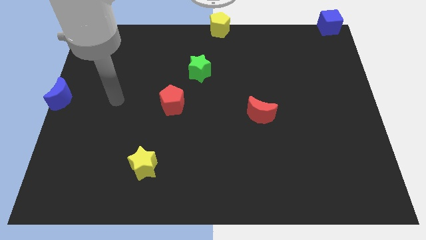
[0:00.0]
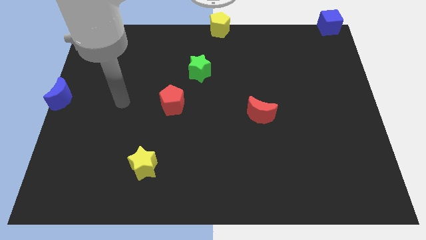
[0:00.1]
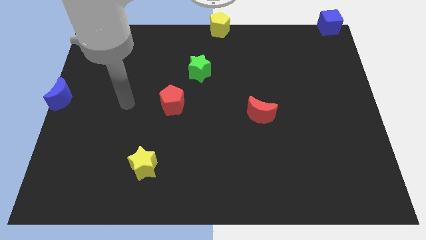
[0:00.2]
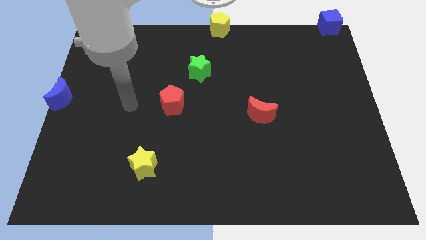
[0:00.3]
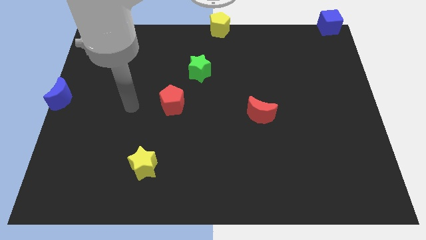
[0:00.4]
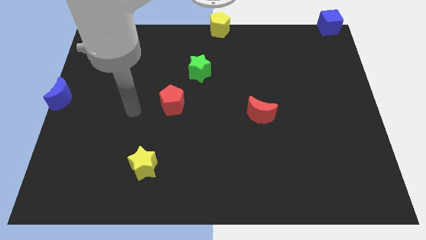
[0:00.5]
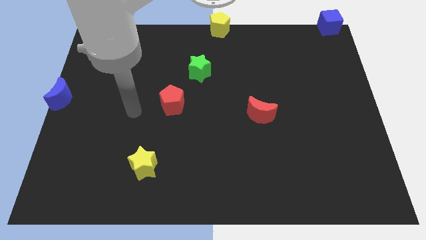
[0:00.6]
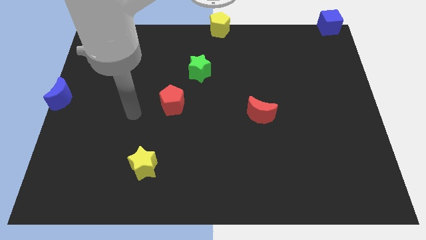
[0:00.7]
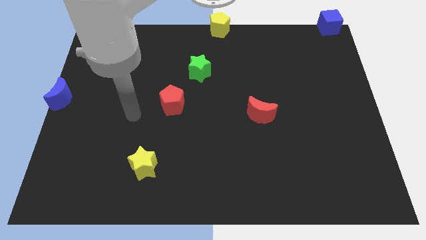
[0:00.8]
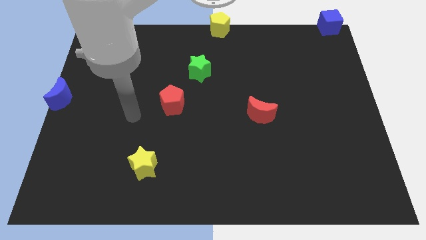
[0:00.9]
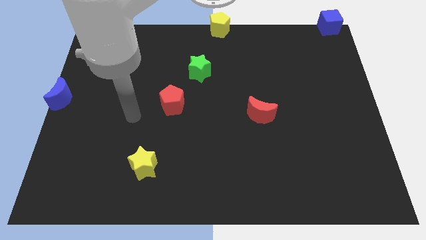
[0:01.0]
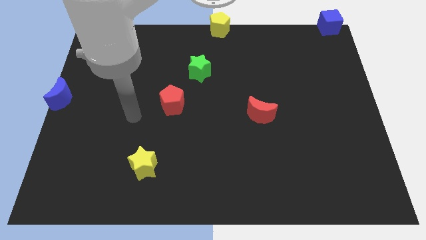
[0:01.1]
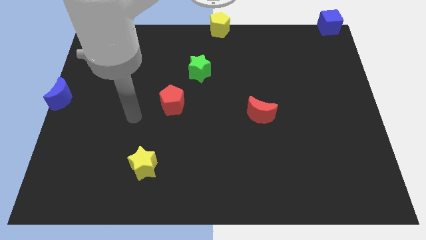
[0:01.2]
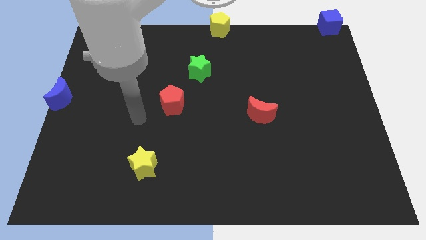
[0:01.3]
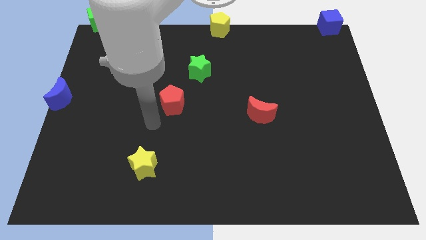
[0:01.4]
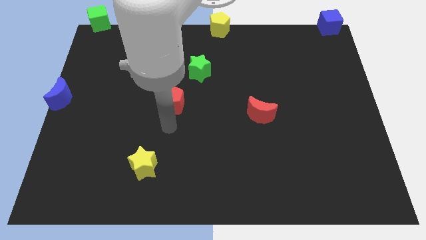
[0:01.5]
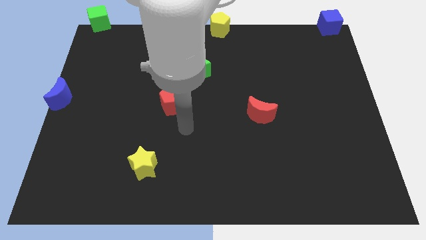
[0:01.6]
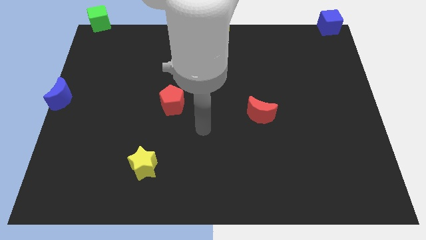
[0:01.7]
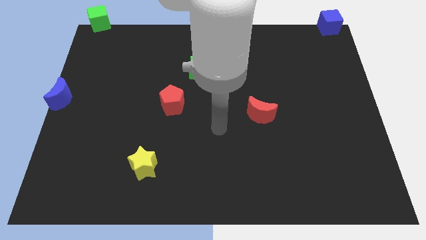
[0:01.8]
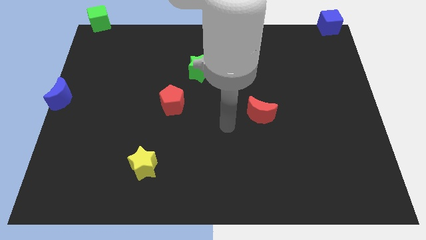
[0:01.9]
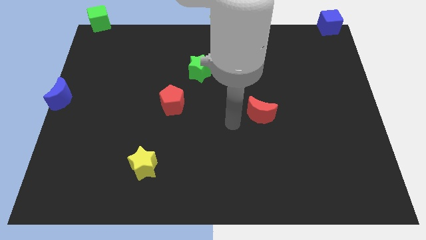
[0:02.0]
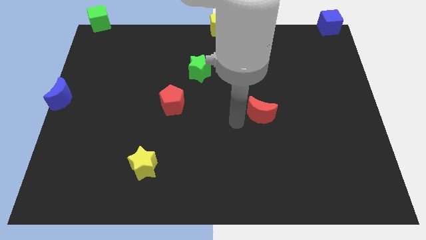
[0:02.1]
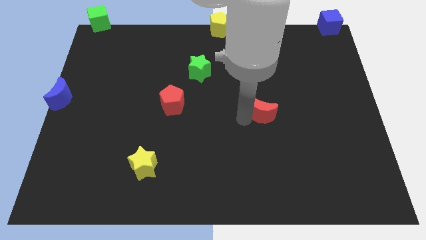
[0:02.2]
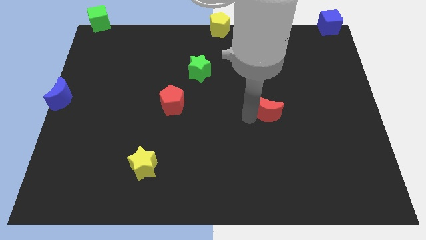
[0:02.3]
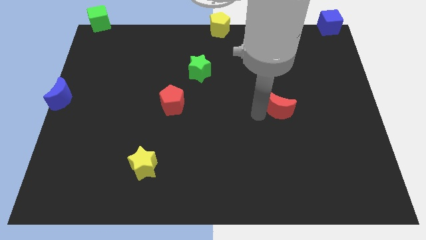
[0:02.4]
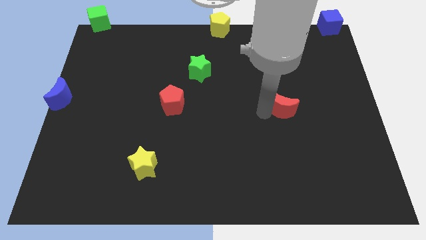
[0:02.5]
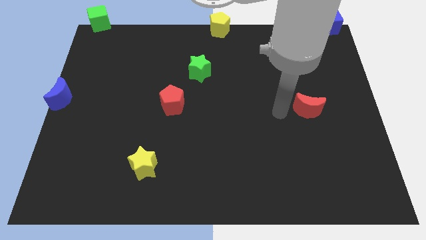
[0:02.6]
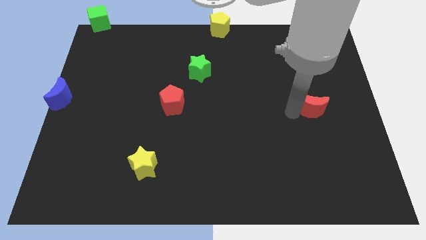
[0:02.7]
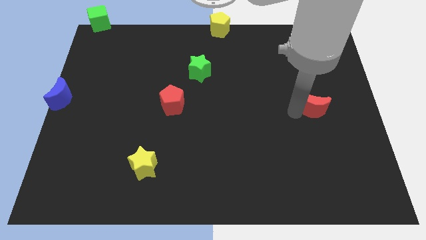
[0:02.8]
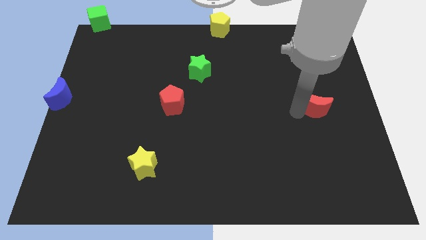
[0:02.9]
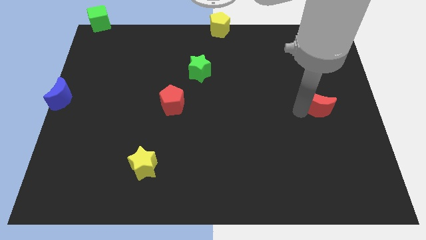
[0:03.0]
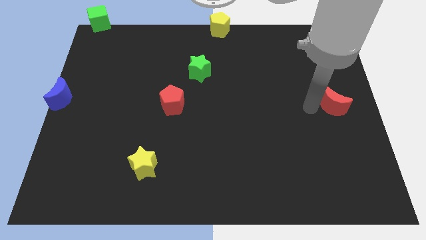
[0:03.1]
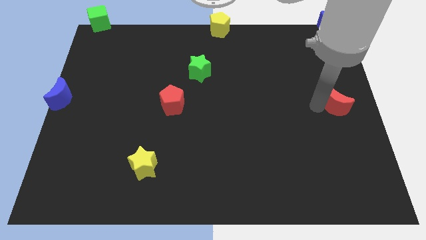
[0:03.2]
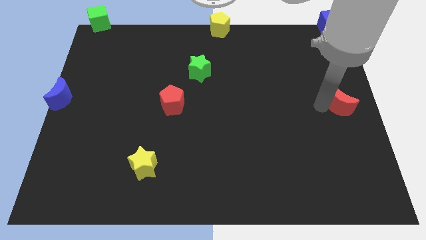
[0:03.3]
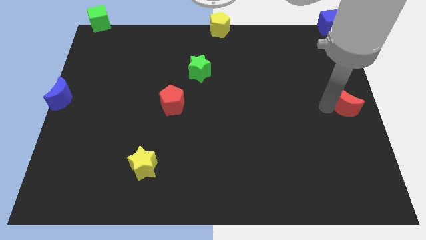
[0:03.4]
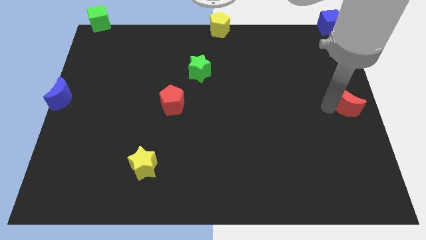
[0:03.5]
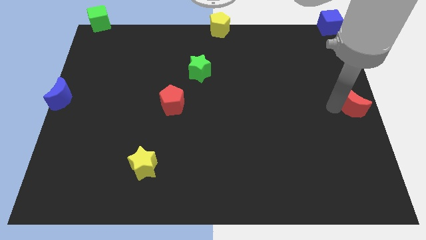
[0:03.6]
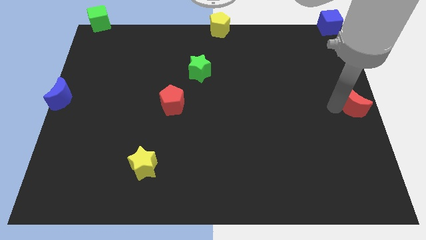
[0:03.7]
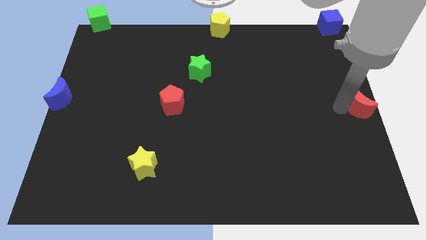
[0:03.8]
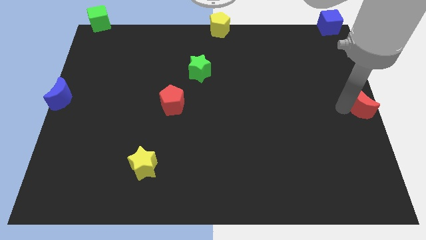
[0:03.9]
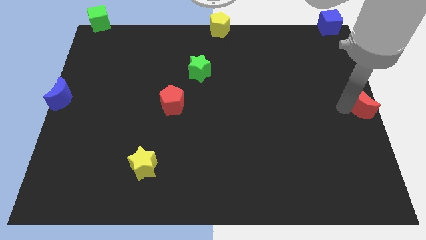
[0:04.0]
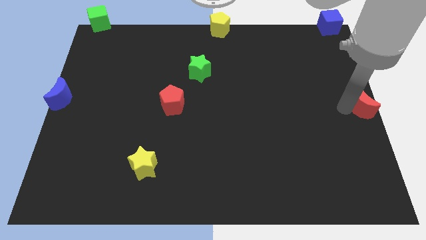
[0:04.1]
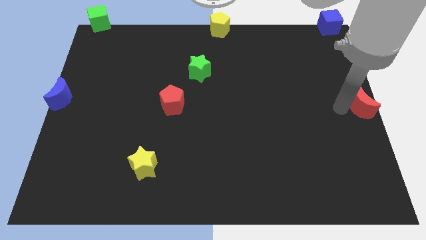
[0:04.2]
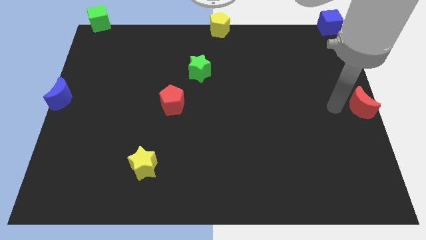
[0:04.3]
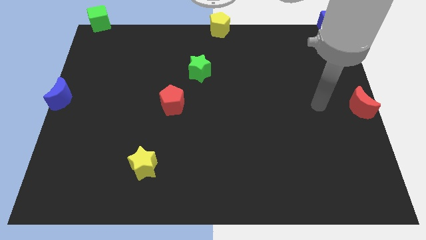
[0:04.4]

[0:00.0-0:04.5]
push the red crescent towards the center right

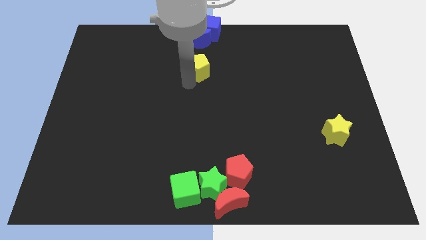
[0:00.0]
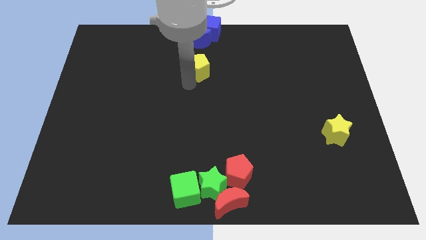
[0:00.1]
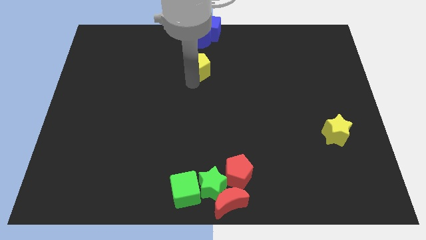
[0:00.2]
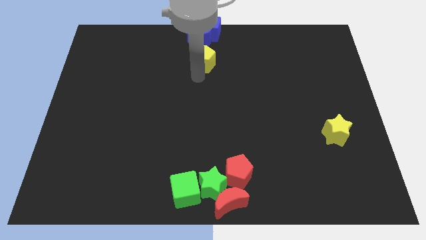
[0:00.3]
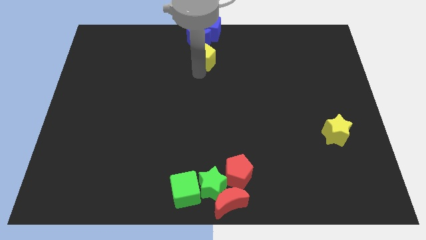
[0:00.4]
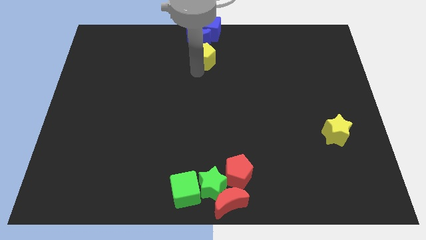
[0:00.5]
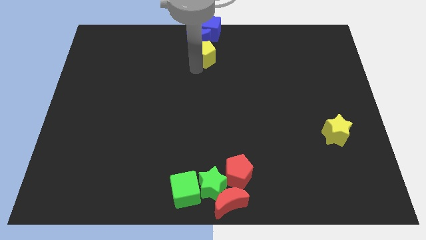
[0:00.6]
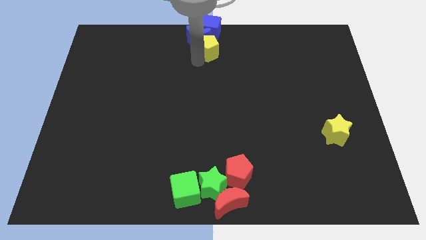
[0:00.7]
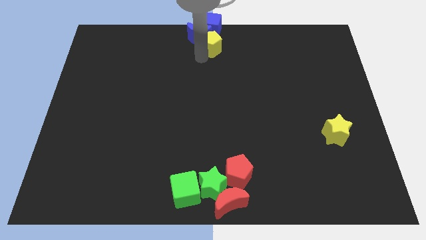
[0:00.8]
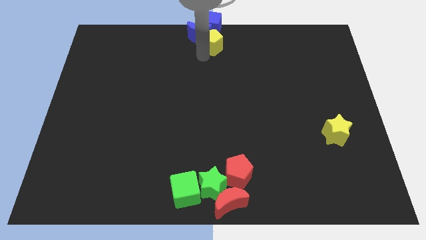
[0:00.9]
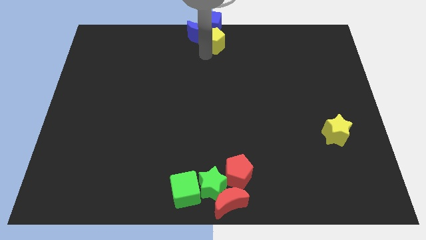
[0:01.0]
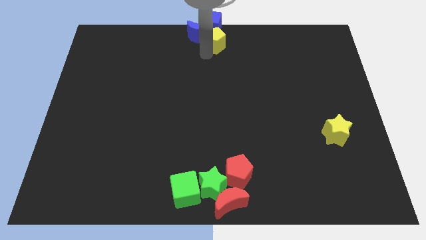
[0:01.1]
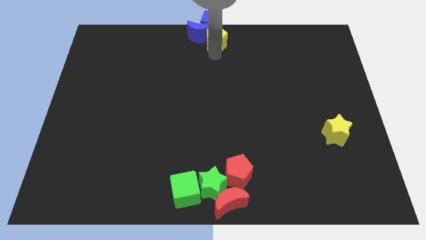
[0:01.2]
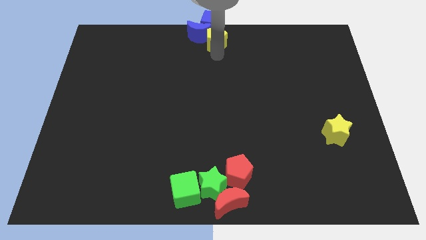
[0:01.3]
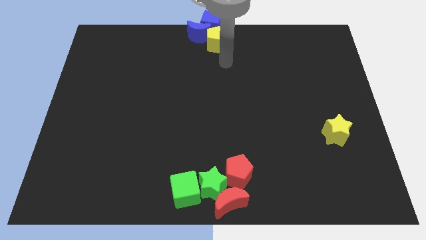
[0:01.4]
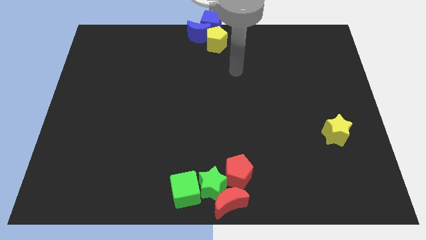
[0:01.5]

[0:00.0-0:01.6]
push the yellow pentagon into the blue moon

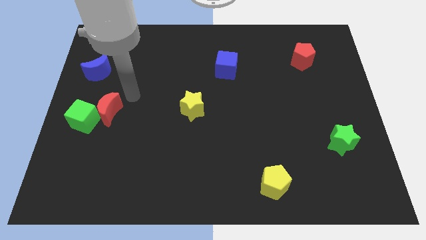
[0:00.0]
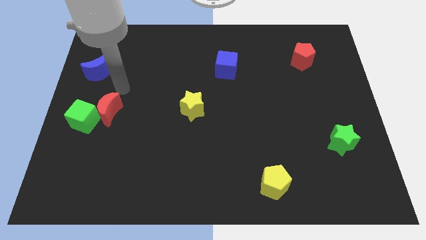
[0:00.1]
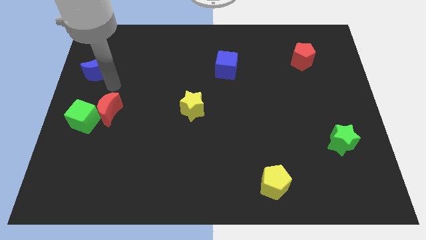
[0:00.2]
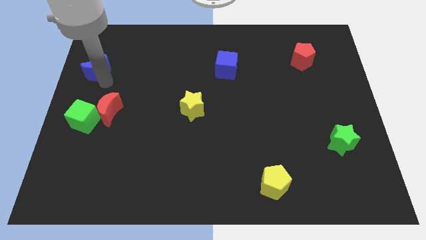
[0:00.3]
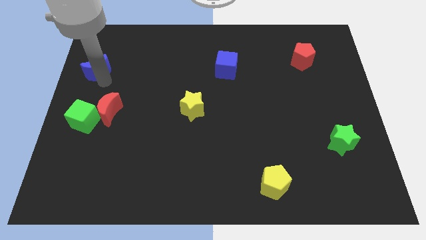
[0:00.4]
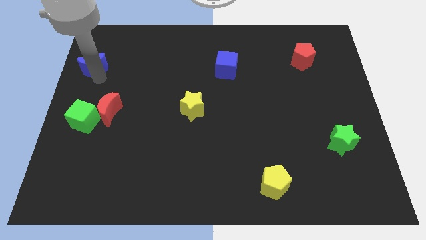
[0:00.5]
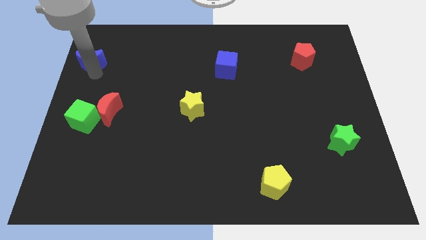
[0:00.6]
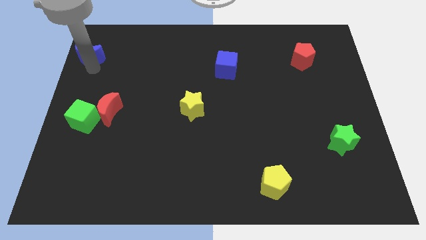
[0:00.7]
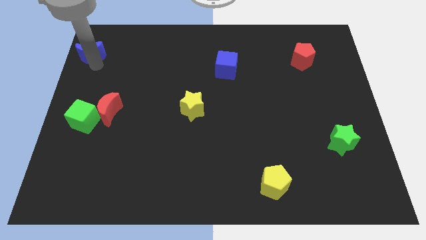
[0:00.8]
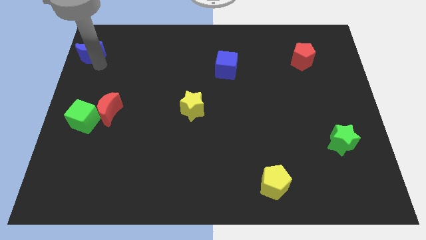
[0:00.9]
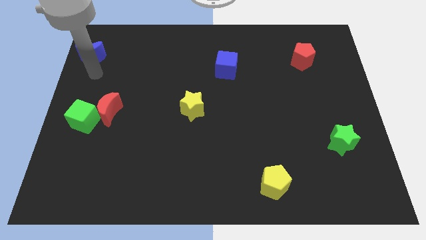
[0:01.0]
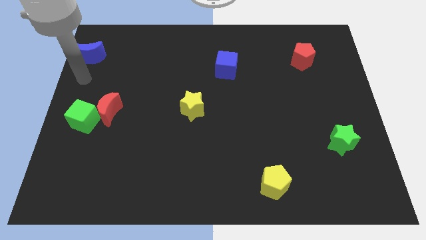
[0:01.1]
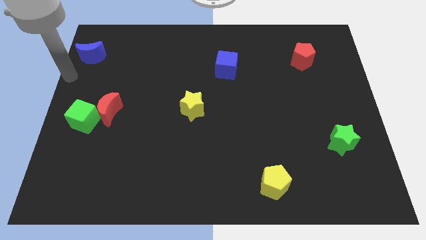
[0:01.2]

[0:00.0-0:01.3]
slide the blue crescent slightly towards up
